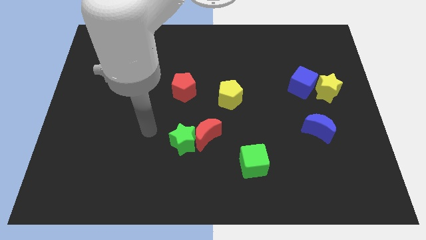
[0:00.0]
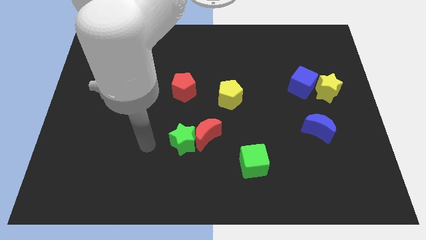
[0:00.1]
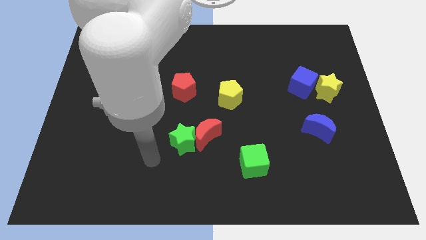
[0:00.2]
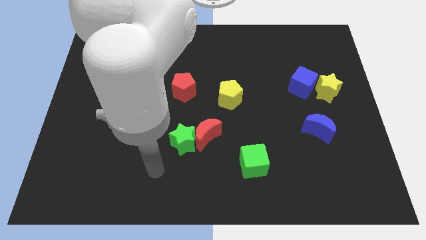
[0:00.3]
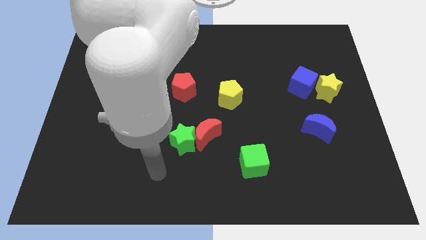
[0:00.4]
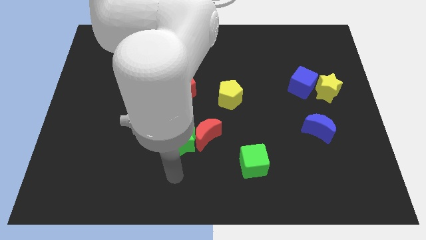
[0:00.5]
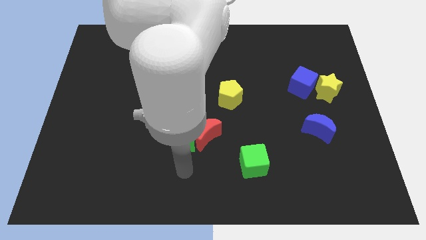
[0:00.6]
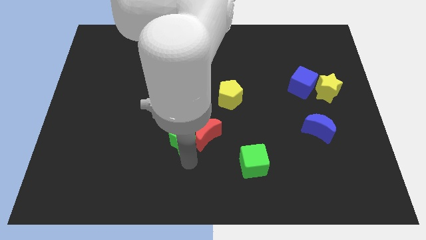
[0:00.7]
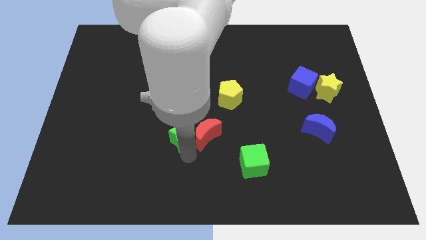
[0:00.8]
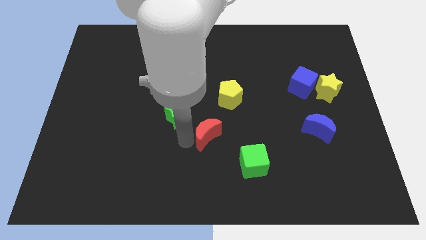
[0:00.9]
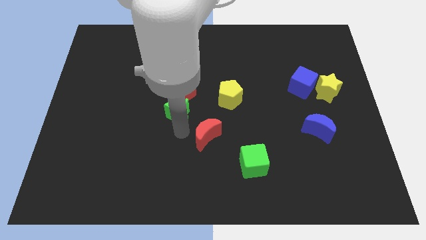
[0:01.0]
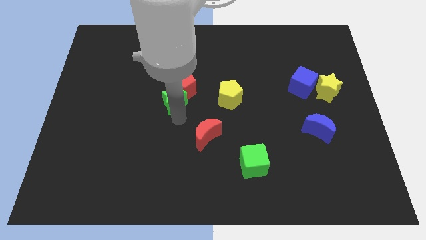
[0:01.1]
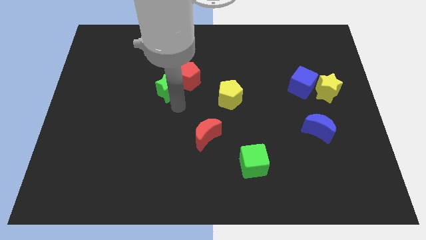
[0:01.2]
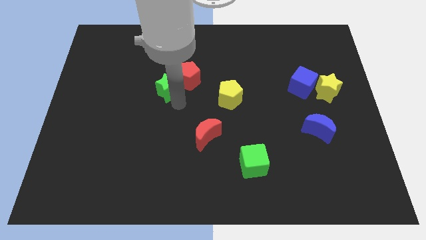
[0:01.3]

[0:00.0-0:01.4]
push the green star into the bottom left side of the red pentagon

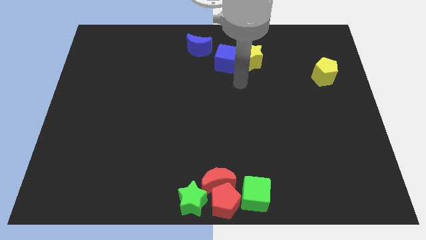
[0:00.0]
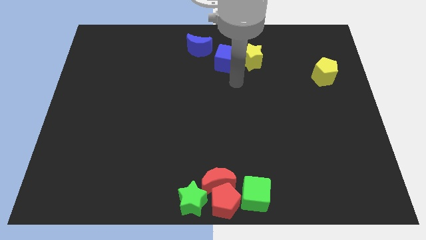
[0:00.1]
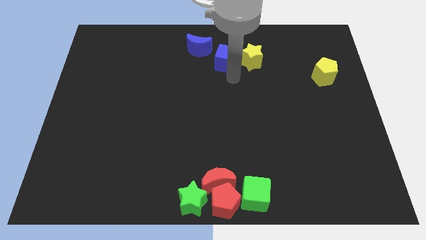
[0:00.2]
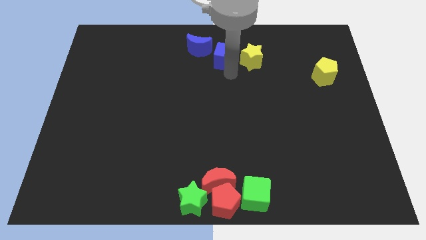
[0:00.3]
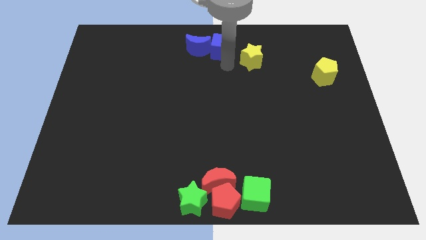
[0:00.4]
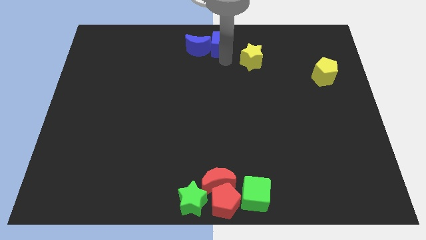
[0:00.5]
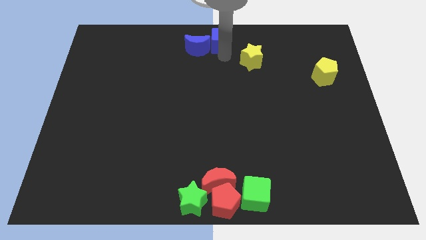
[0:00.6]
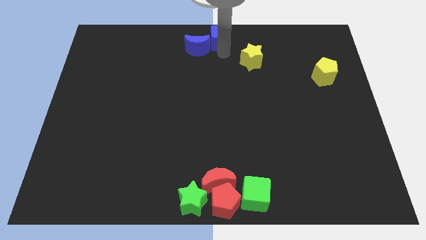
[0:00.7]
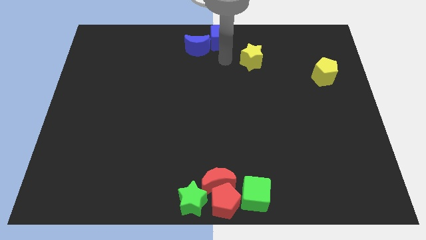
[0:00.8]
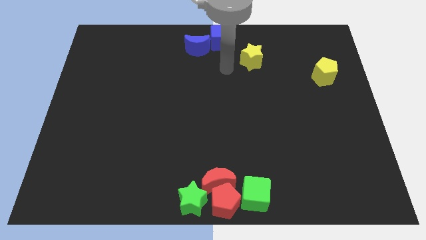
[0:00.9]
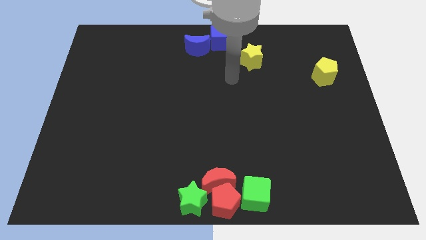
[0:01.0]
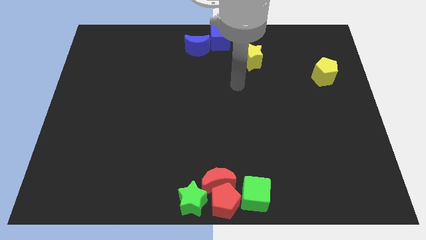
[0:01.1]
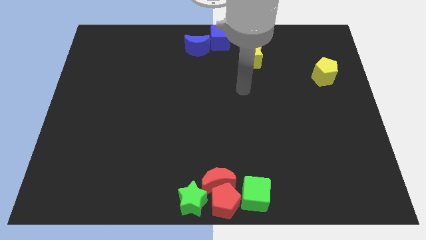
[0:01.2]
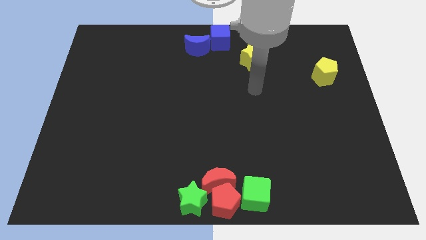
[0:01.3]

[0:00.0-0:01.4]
slide the blue cube to the top center of the board

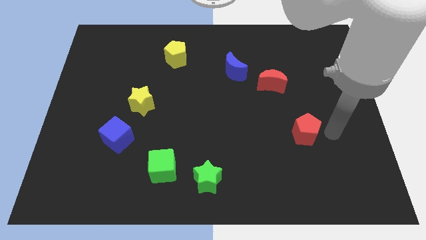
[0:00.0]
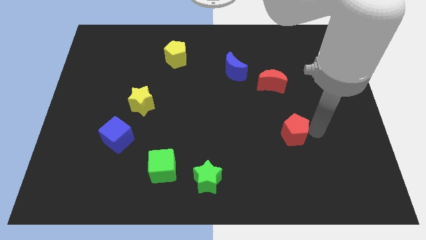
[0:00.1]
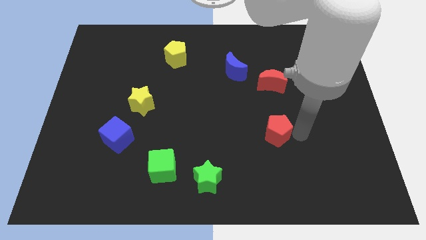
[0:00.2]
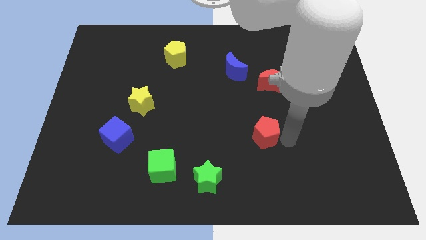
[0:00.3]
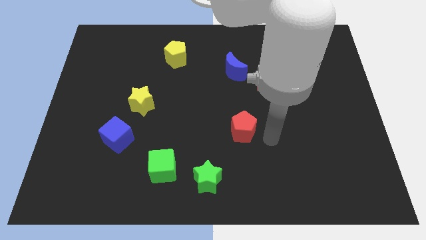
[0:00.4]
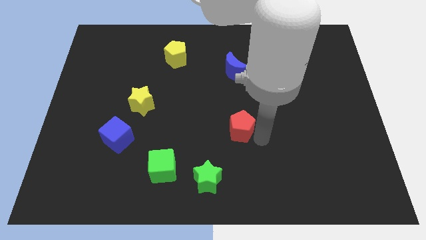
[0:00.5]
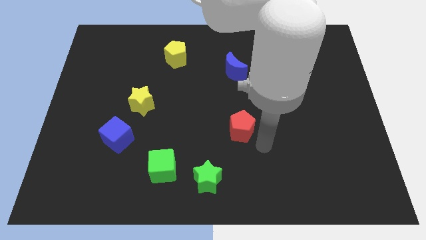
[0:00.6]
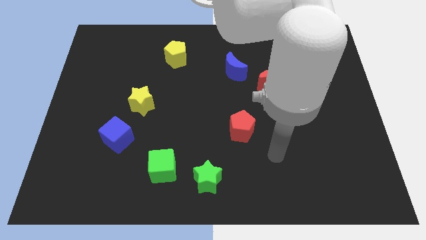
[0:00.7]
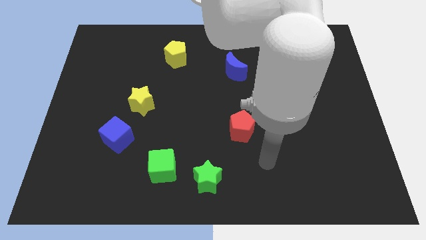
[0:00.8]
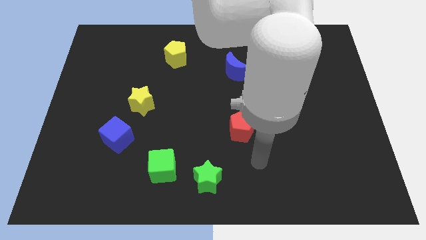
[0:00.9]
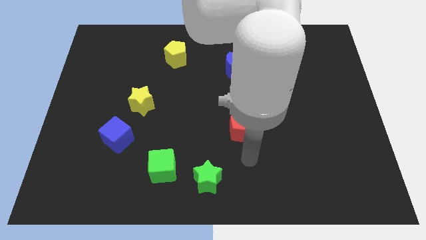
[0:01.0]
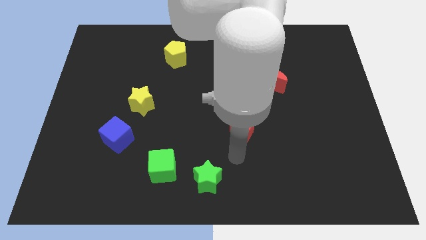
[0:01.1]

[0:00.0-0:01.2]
push the red pentagon to the right of the board

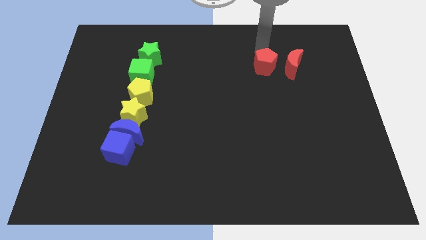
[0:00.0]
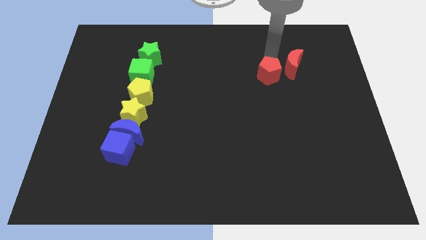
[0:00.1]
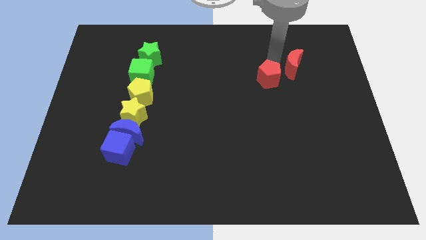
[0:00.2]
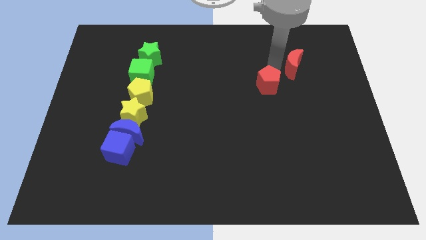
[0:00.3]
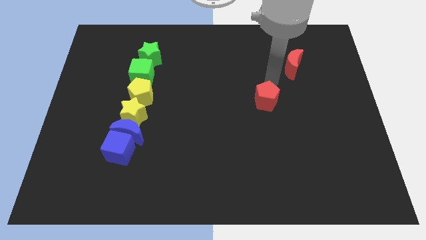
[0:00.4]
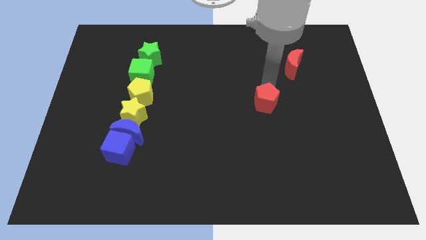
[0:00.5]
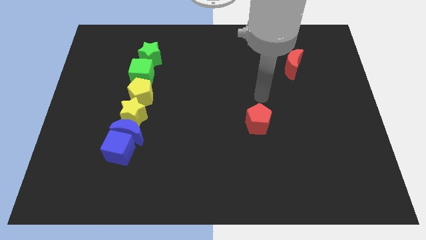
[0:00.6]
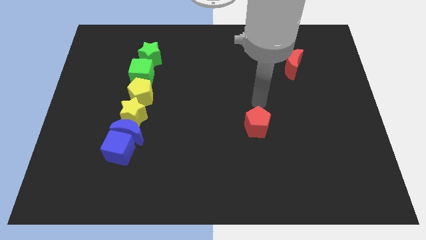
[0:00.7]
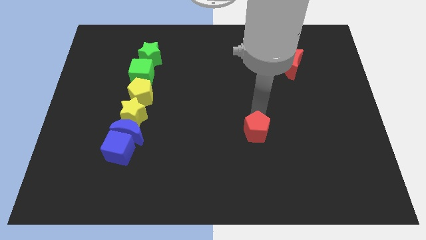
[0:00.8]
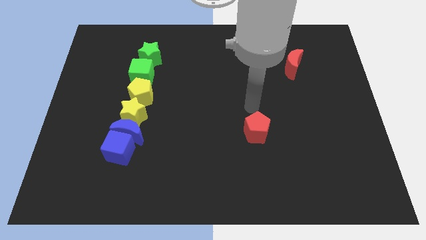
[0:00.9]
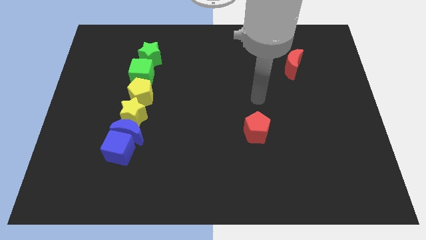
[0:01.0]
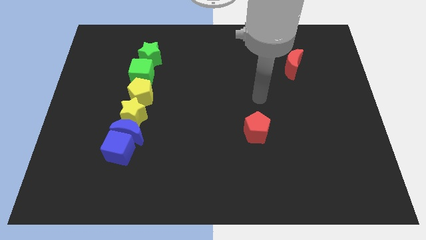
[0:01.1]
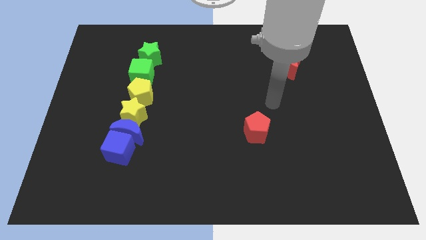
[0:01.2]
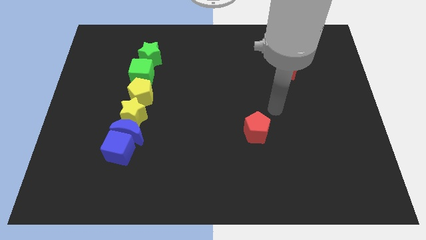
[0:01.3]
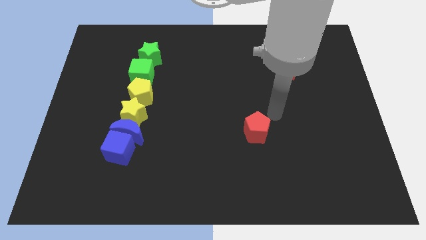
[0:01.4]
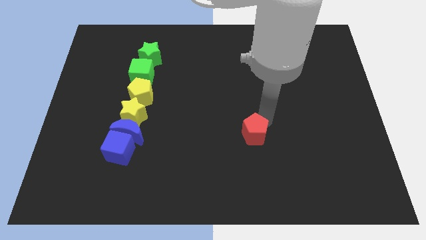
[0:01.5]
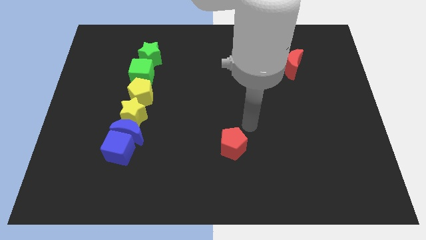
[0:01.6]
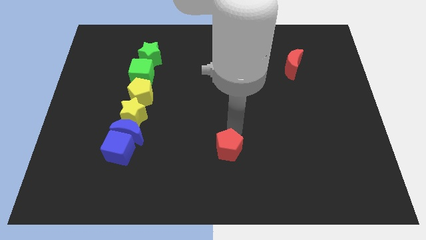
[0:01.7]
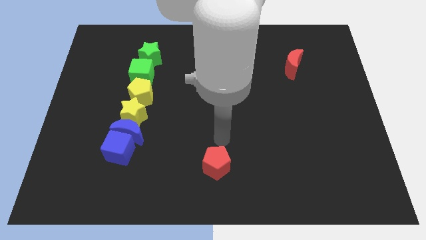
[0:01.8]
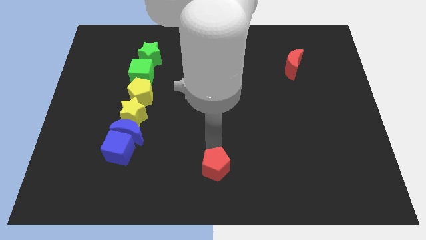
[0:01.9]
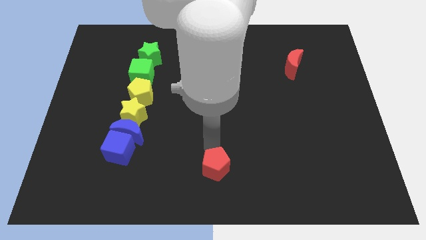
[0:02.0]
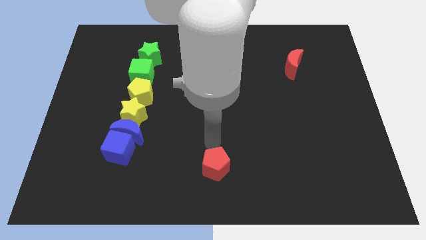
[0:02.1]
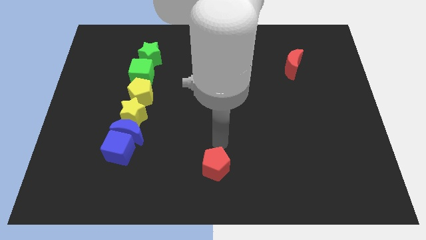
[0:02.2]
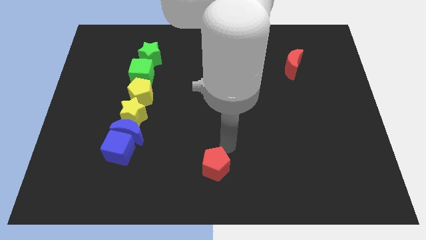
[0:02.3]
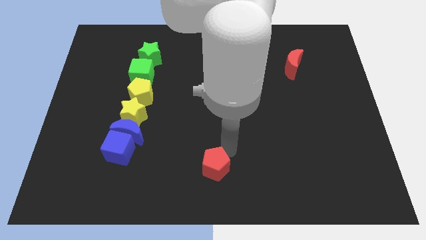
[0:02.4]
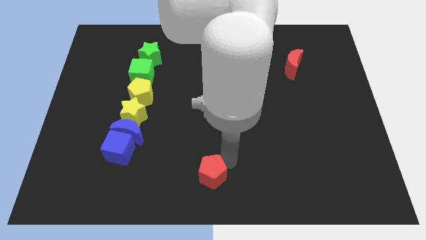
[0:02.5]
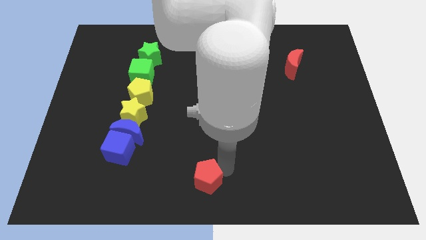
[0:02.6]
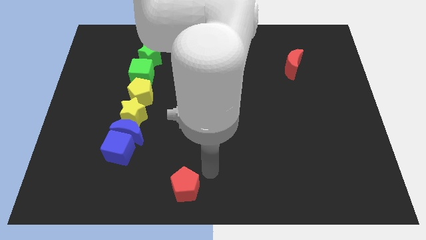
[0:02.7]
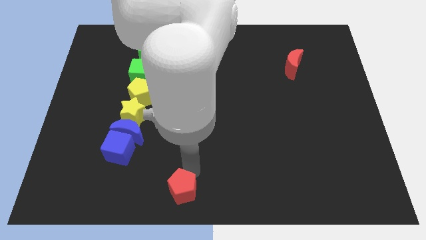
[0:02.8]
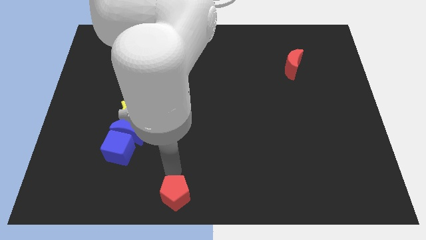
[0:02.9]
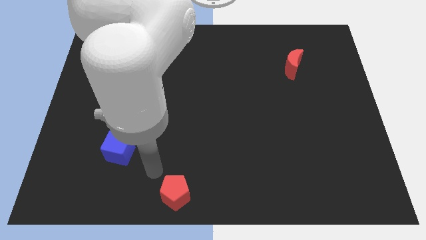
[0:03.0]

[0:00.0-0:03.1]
slide the red pentagon downwards

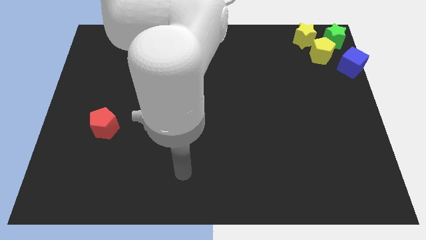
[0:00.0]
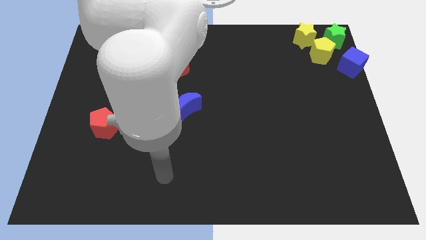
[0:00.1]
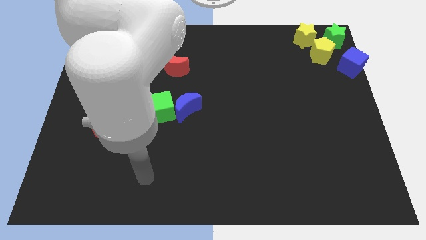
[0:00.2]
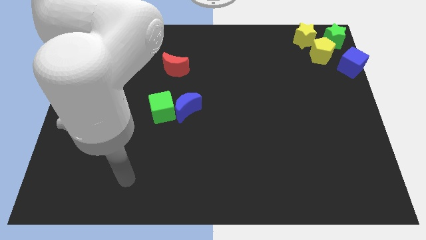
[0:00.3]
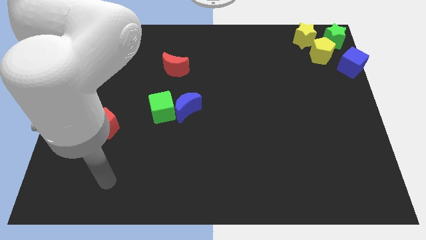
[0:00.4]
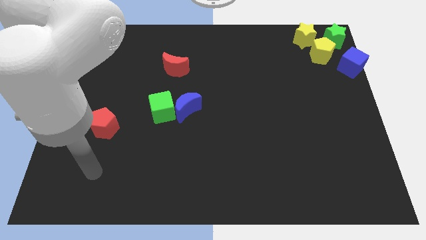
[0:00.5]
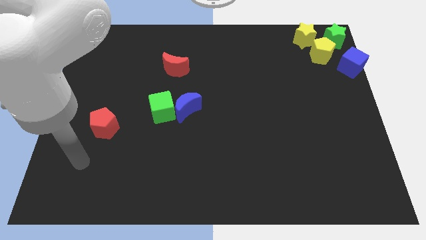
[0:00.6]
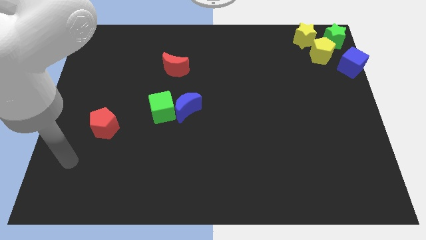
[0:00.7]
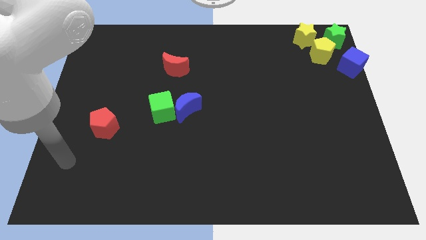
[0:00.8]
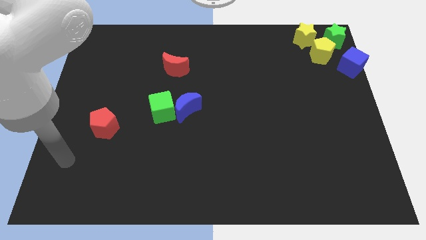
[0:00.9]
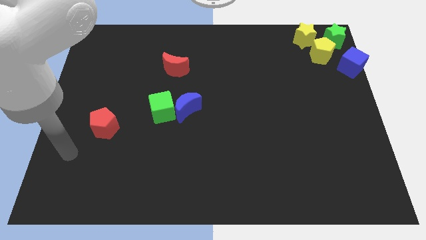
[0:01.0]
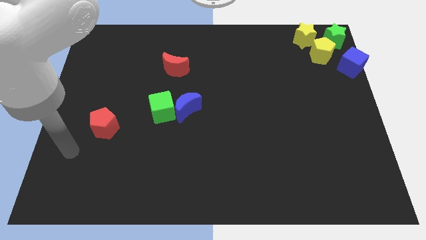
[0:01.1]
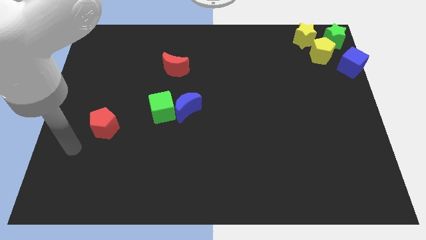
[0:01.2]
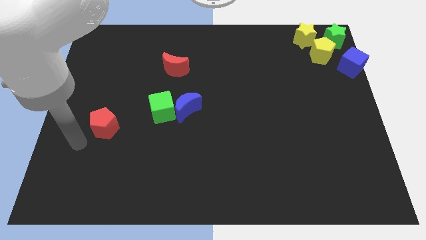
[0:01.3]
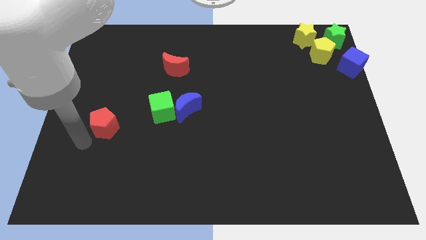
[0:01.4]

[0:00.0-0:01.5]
move your arm towards the red pentagon

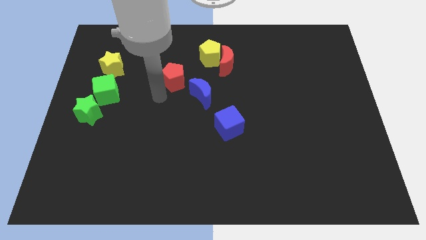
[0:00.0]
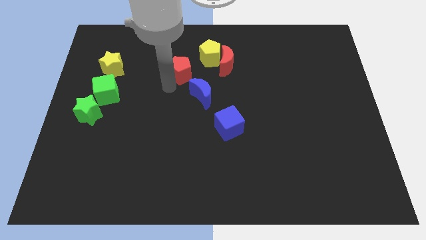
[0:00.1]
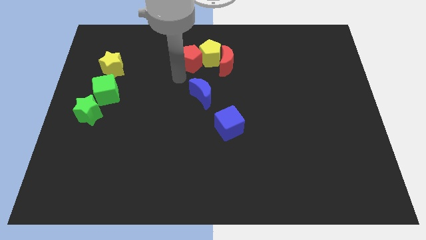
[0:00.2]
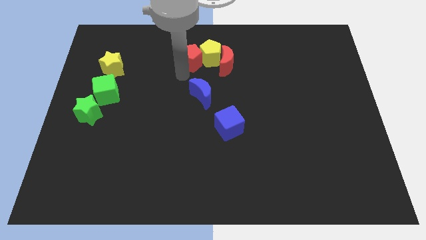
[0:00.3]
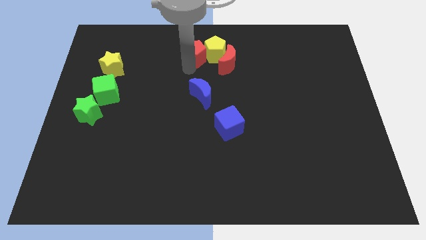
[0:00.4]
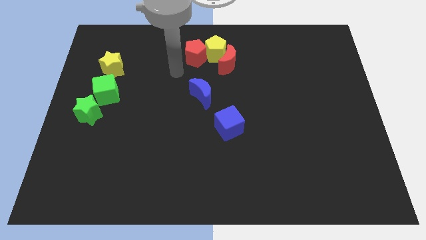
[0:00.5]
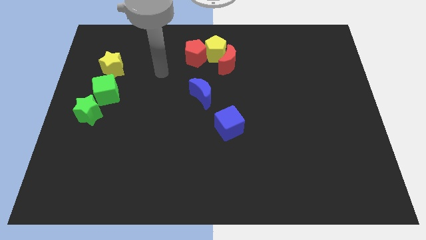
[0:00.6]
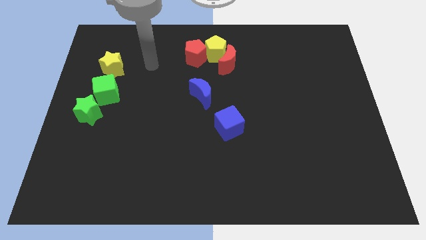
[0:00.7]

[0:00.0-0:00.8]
push the red pentagon to the left side of the yellow pentagon on the board
